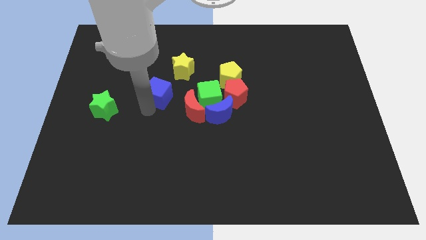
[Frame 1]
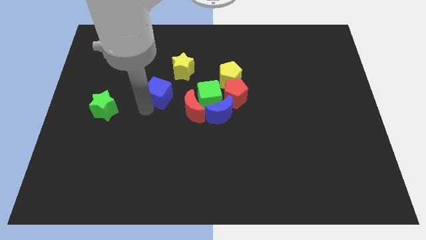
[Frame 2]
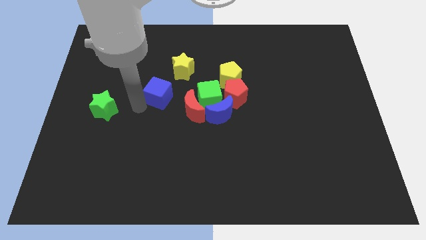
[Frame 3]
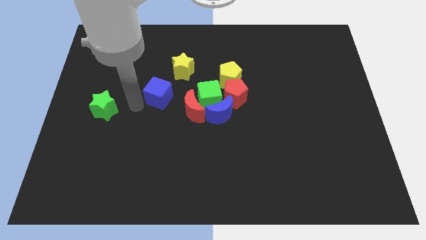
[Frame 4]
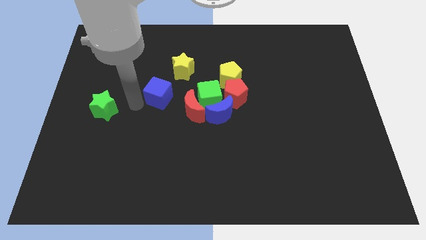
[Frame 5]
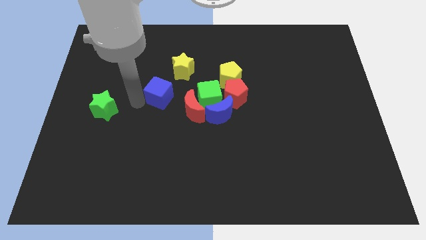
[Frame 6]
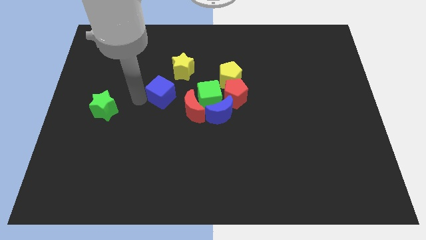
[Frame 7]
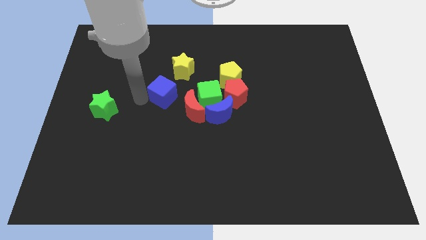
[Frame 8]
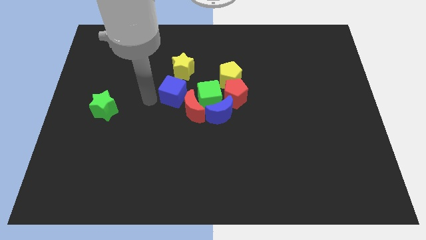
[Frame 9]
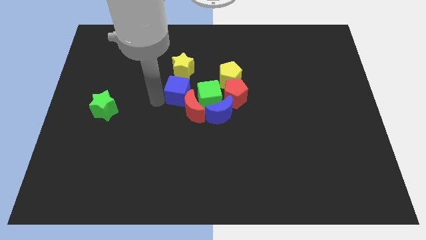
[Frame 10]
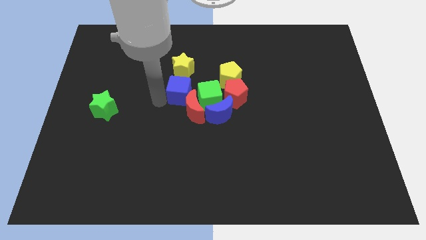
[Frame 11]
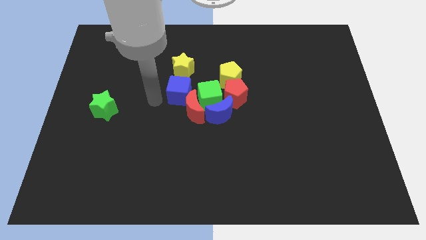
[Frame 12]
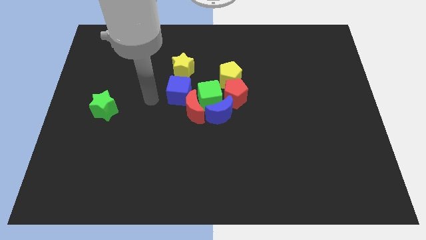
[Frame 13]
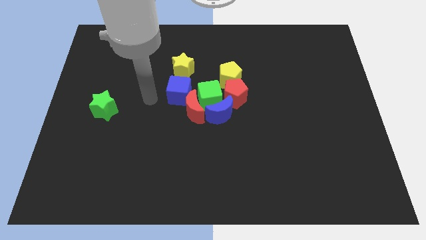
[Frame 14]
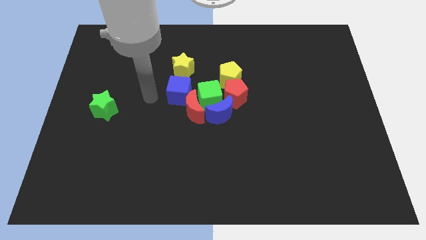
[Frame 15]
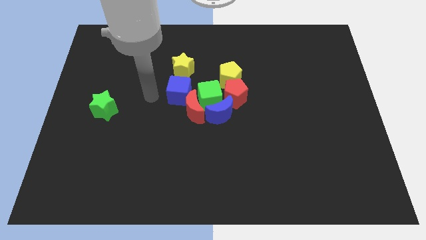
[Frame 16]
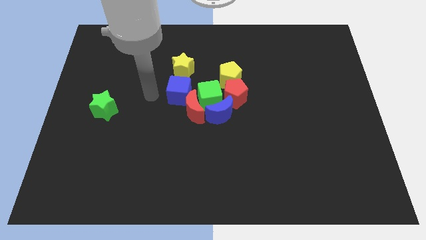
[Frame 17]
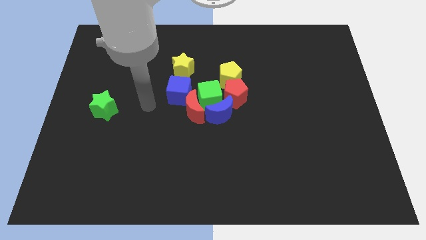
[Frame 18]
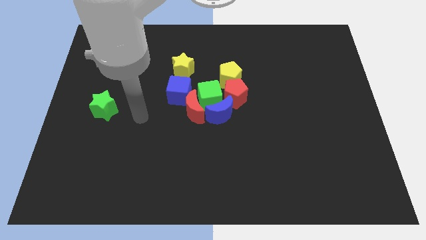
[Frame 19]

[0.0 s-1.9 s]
move the blue cube to the bottom side of the yellow star

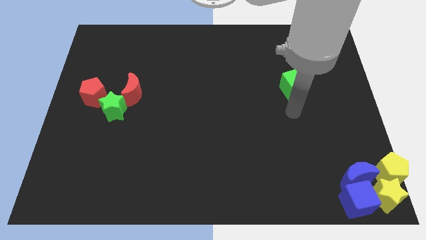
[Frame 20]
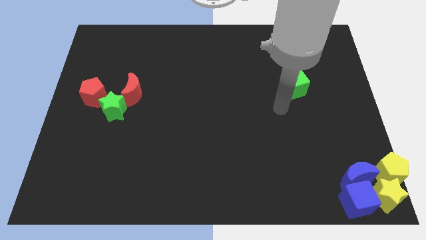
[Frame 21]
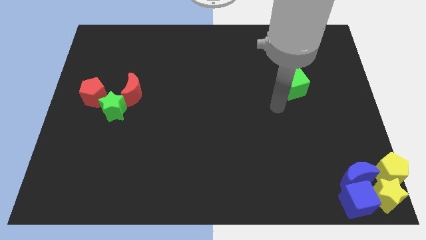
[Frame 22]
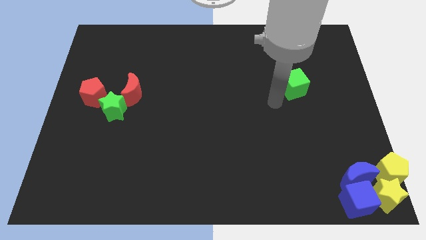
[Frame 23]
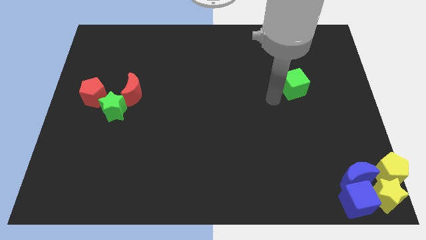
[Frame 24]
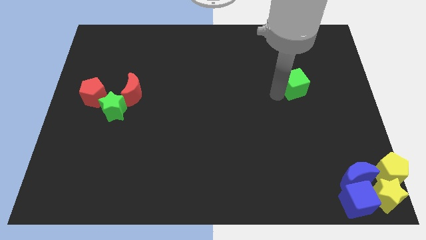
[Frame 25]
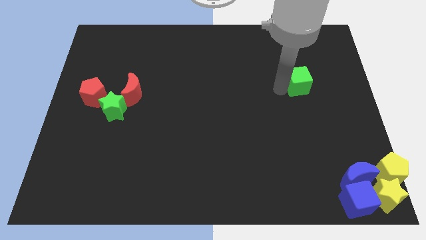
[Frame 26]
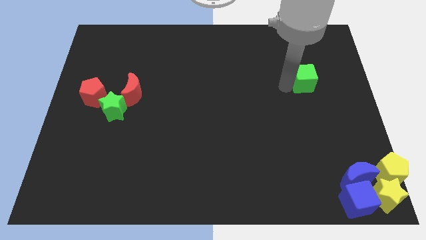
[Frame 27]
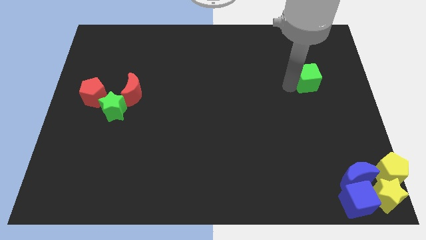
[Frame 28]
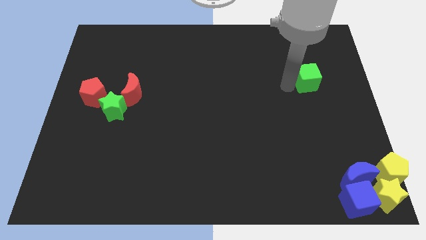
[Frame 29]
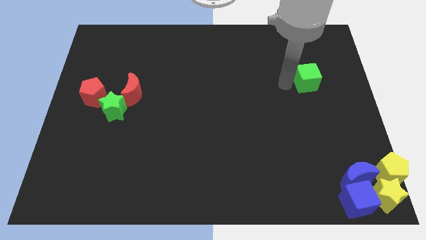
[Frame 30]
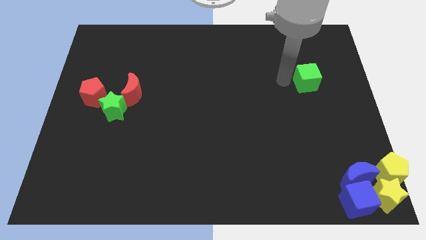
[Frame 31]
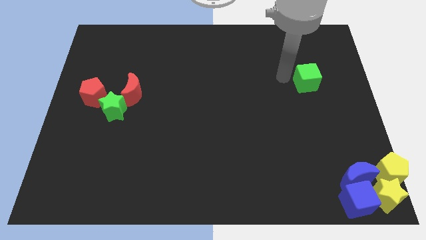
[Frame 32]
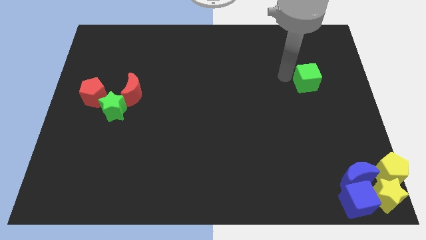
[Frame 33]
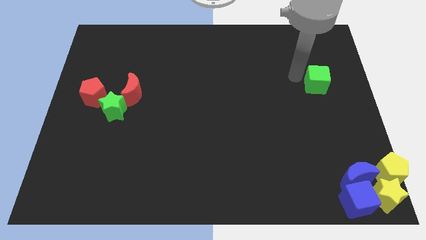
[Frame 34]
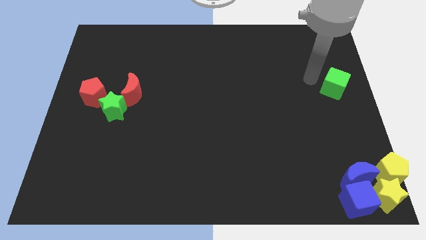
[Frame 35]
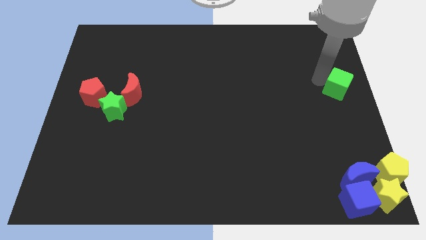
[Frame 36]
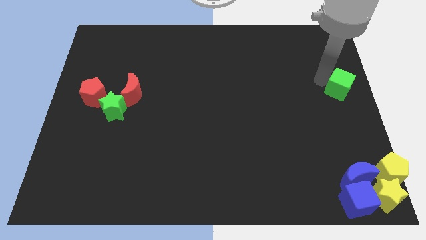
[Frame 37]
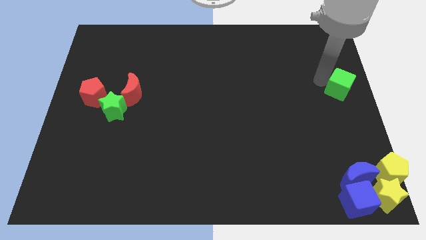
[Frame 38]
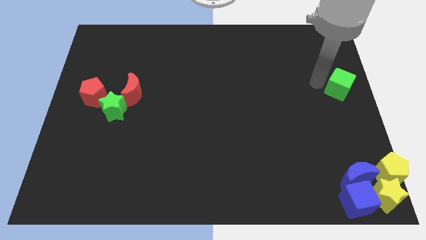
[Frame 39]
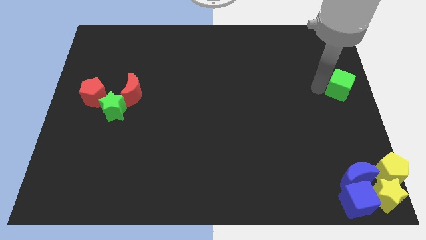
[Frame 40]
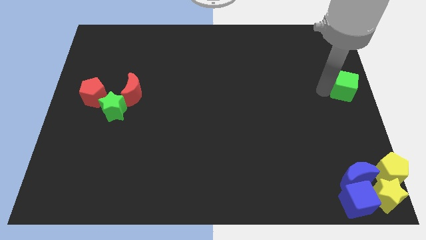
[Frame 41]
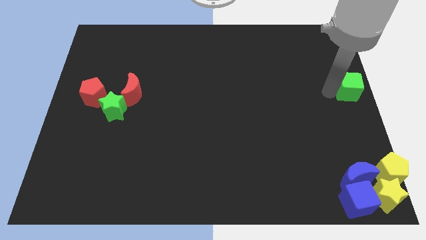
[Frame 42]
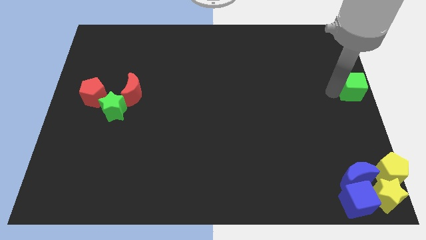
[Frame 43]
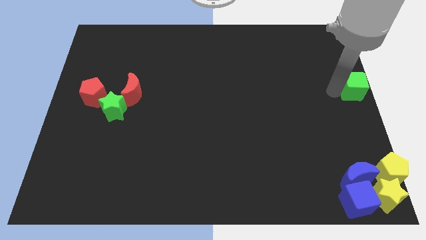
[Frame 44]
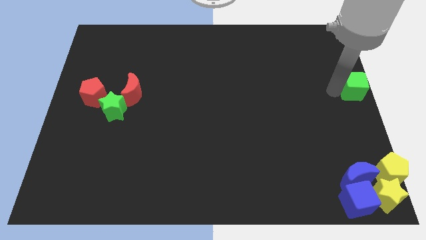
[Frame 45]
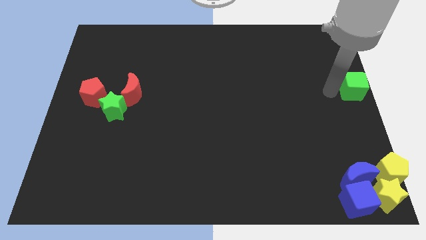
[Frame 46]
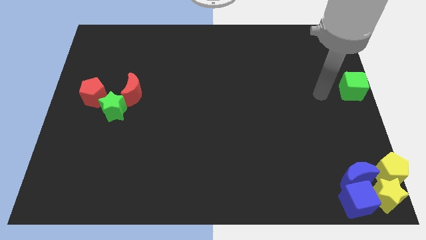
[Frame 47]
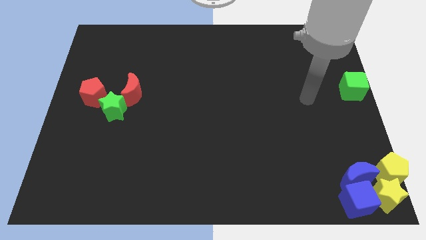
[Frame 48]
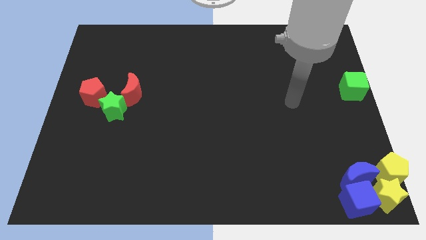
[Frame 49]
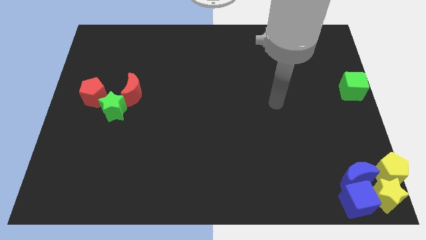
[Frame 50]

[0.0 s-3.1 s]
move the green cube towards the right center

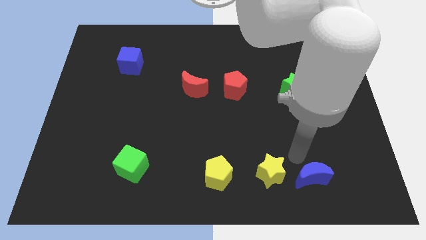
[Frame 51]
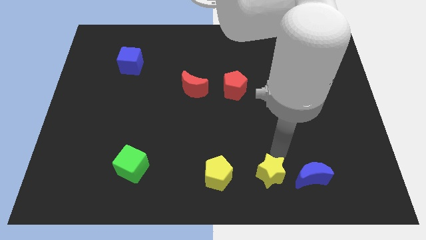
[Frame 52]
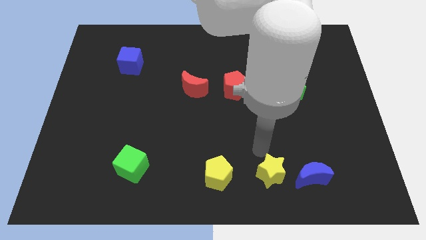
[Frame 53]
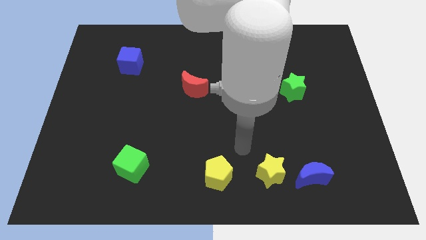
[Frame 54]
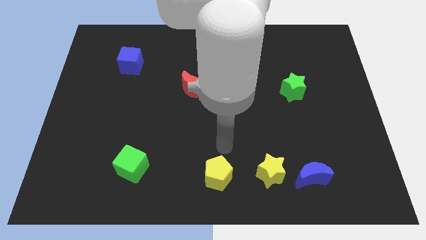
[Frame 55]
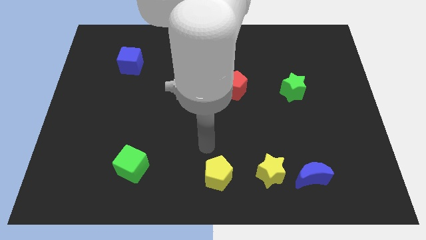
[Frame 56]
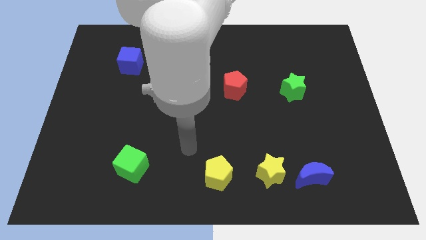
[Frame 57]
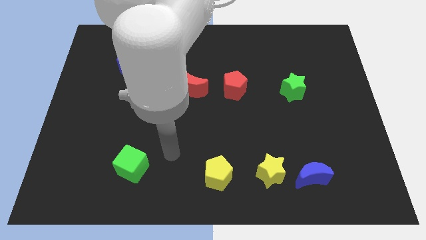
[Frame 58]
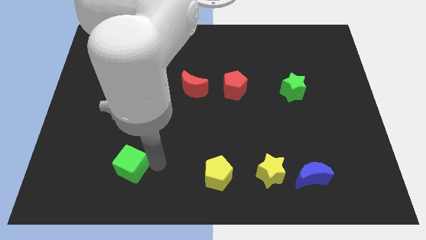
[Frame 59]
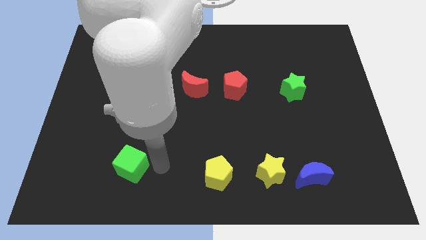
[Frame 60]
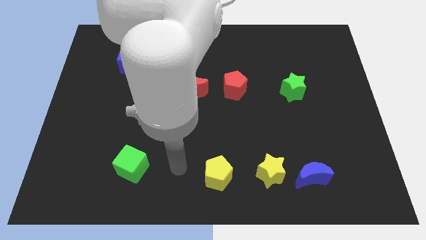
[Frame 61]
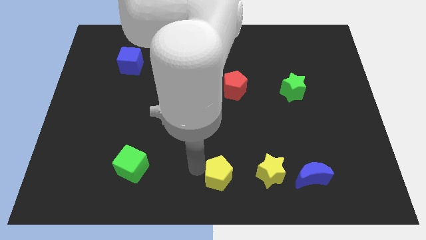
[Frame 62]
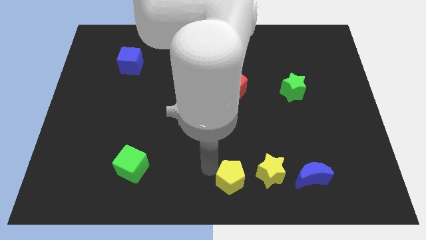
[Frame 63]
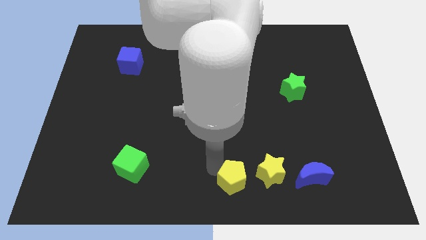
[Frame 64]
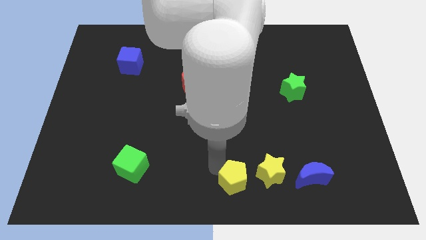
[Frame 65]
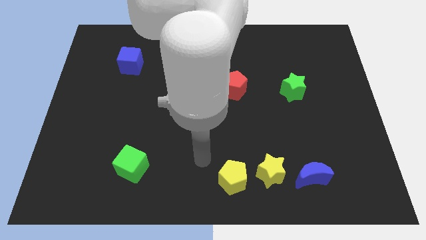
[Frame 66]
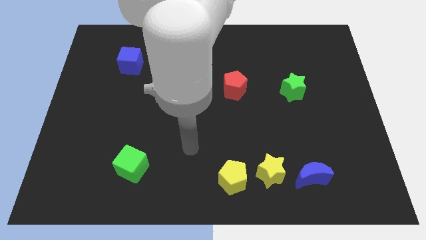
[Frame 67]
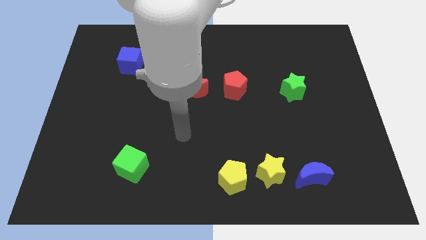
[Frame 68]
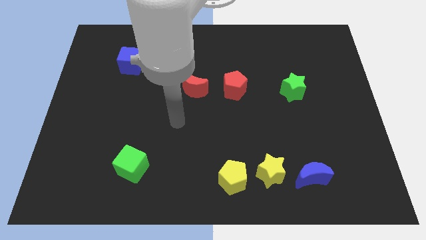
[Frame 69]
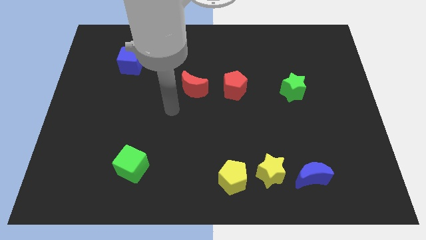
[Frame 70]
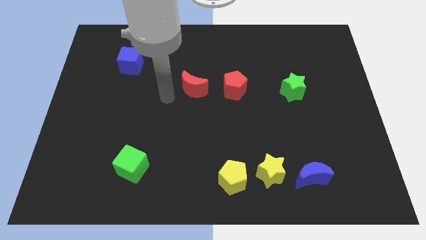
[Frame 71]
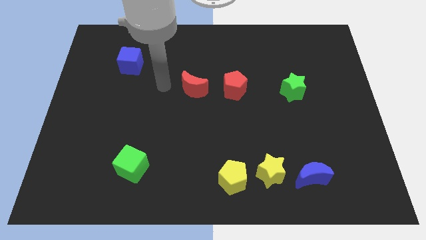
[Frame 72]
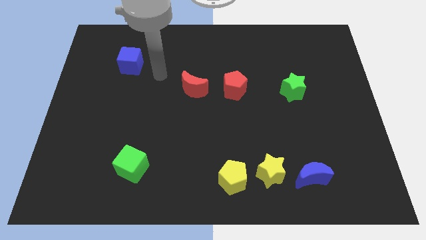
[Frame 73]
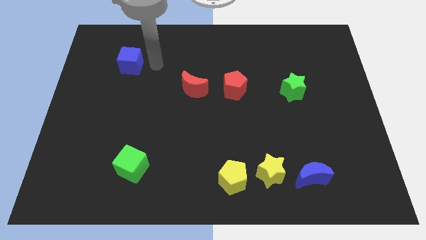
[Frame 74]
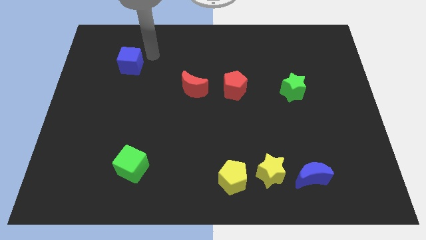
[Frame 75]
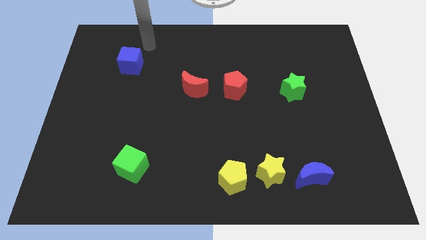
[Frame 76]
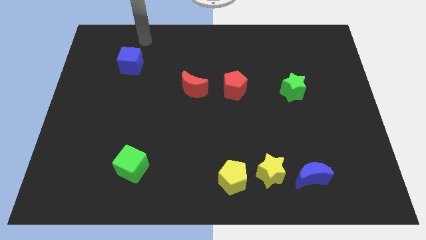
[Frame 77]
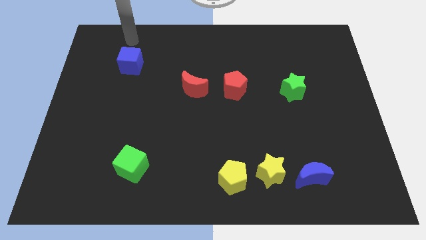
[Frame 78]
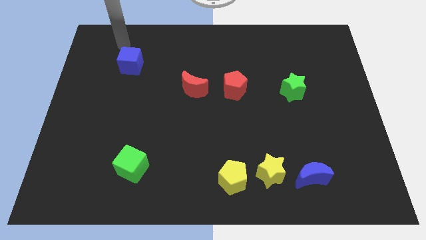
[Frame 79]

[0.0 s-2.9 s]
place the arm on the top of the blue cube

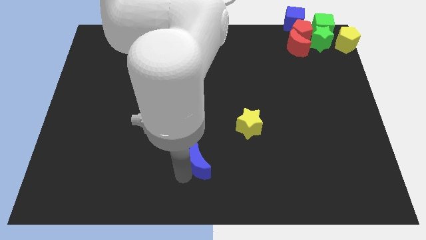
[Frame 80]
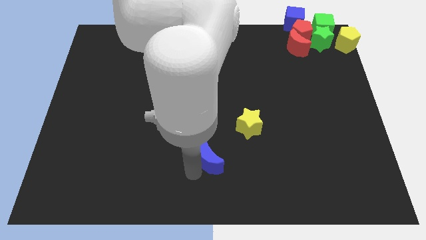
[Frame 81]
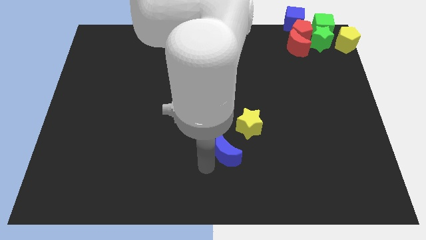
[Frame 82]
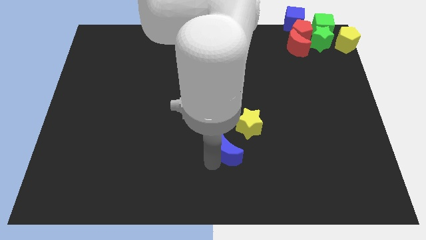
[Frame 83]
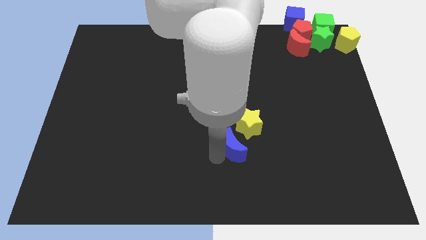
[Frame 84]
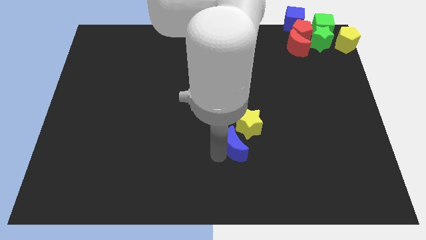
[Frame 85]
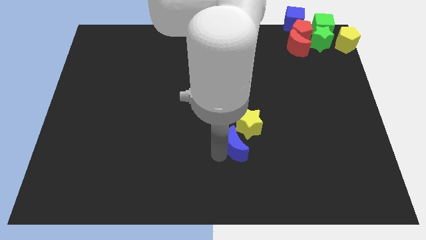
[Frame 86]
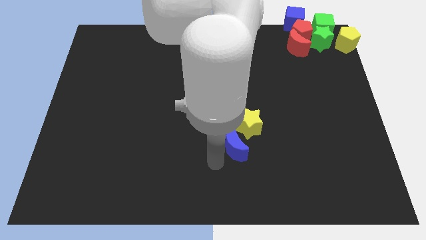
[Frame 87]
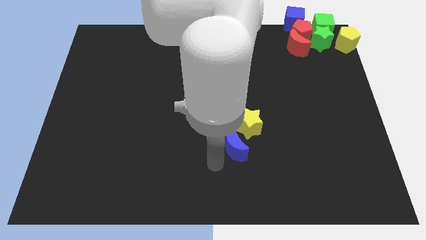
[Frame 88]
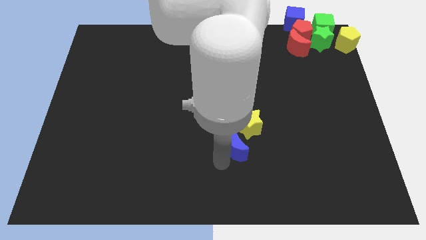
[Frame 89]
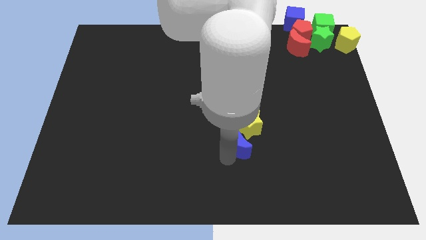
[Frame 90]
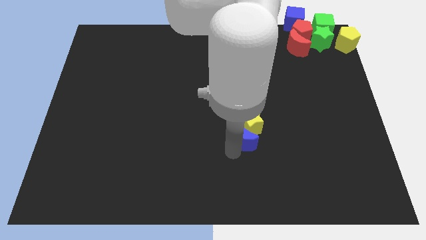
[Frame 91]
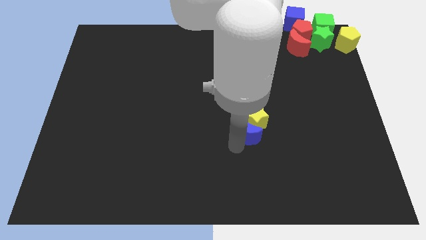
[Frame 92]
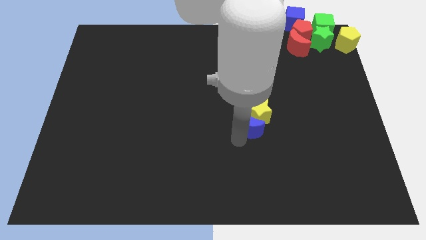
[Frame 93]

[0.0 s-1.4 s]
place the blue crescent into the yellow star
